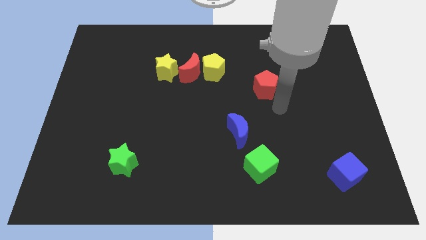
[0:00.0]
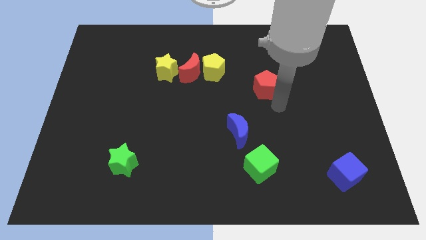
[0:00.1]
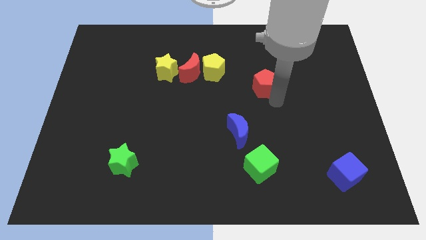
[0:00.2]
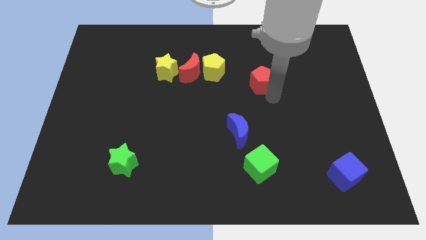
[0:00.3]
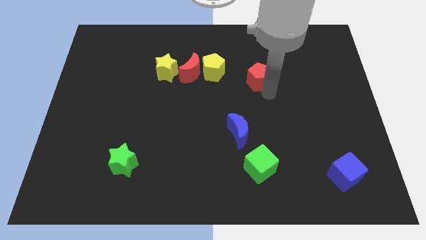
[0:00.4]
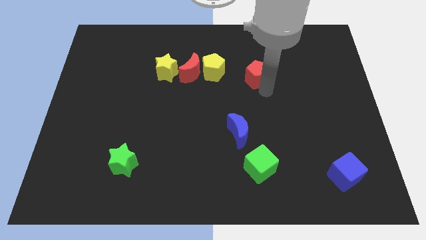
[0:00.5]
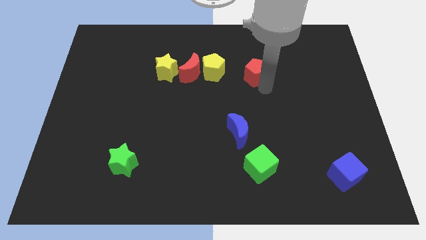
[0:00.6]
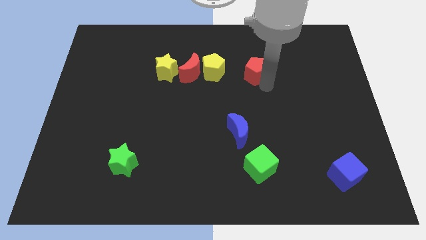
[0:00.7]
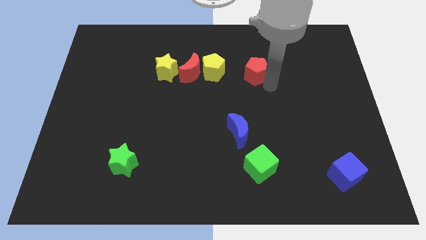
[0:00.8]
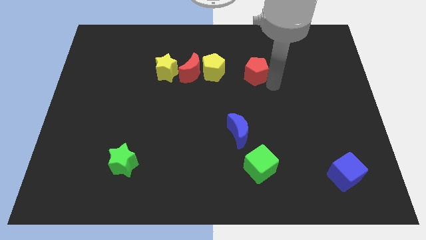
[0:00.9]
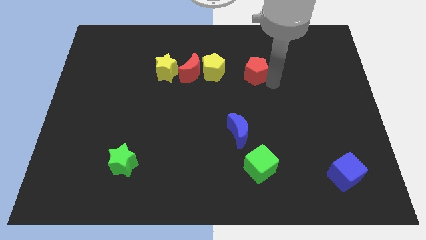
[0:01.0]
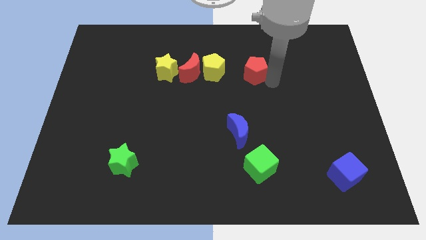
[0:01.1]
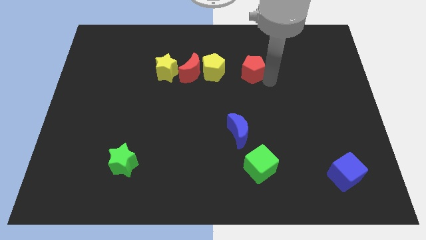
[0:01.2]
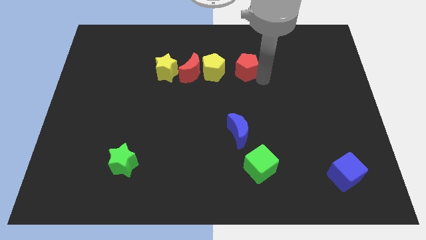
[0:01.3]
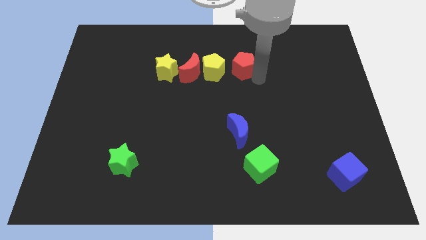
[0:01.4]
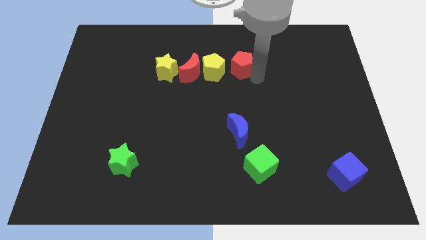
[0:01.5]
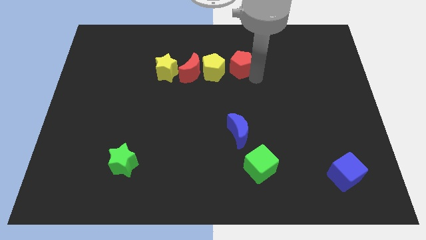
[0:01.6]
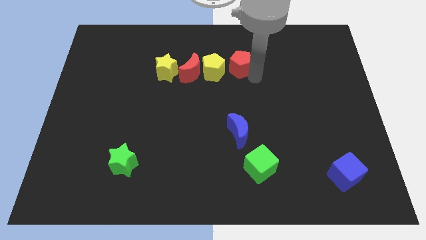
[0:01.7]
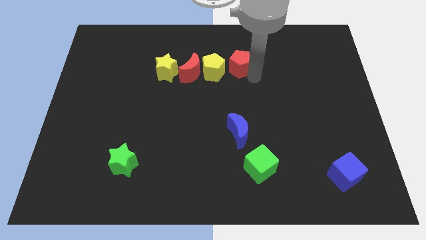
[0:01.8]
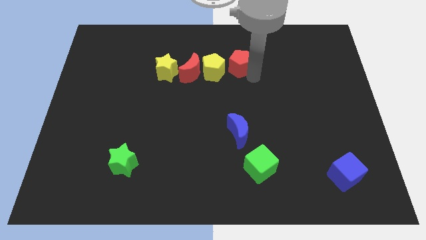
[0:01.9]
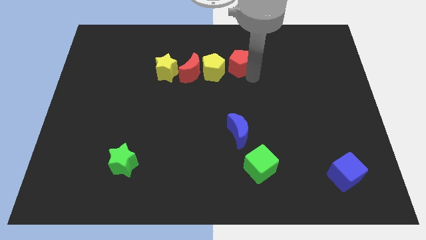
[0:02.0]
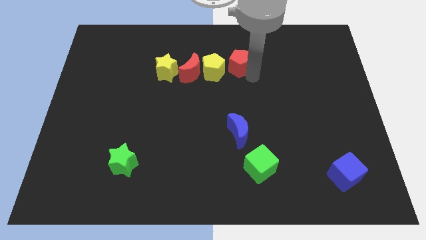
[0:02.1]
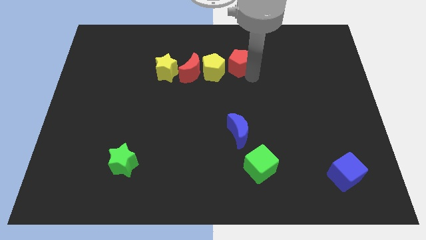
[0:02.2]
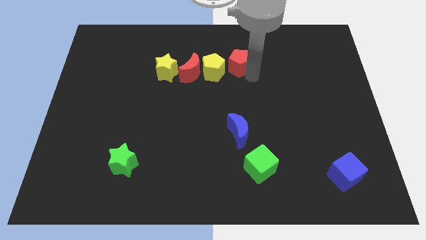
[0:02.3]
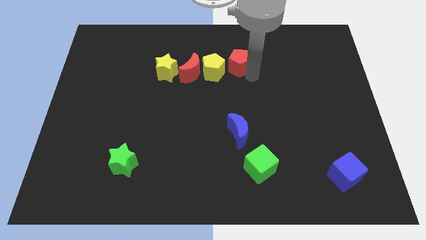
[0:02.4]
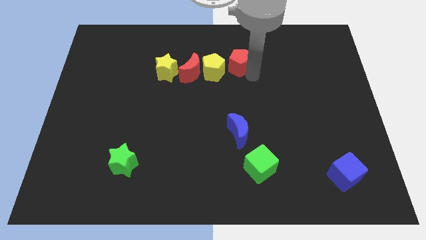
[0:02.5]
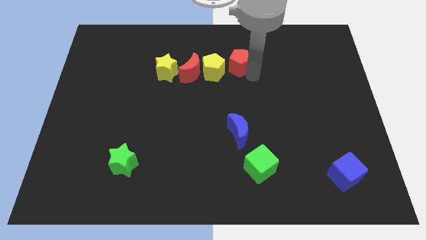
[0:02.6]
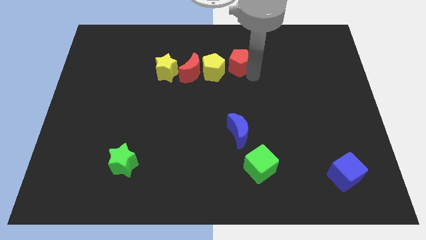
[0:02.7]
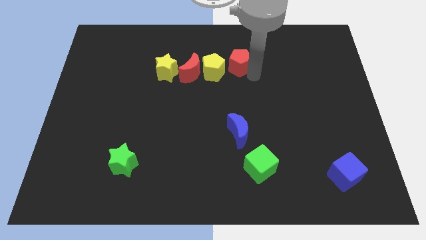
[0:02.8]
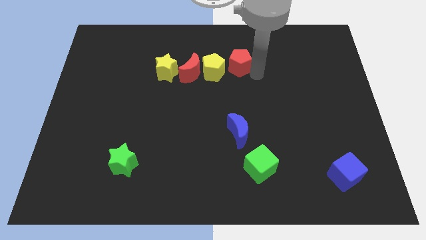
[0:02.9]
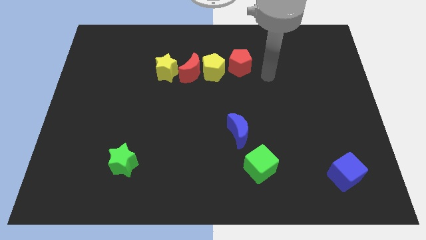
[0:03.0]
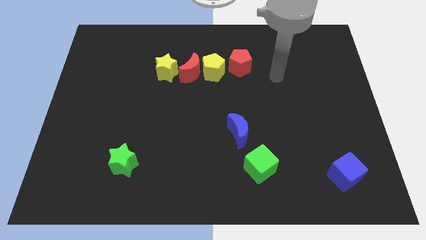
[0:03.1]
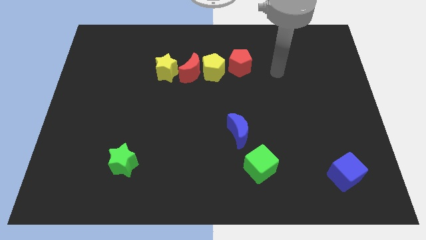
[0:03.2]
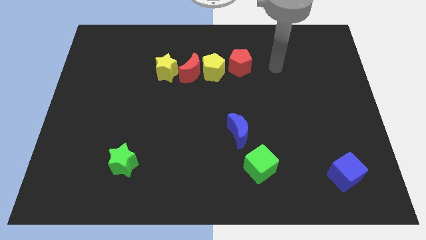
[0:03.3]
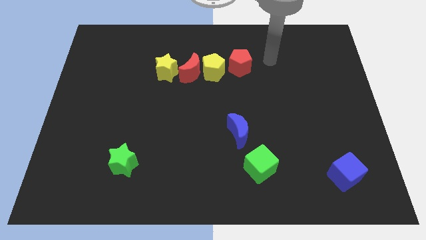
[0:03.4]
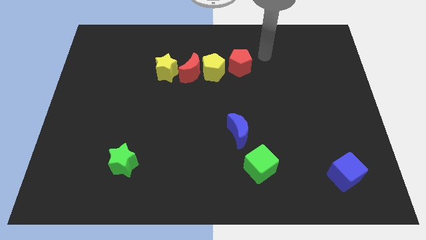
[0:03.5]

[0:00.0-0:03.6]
place the red pentagon to the right of the yellow pentagon

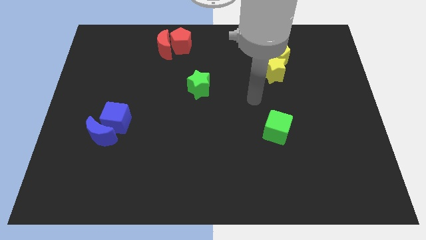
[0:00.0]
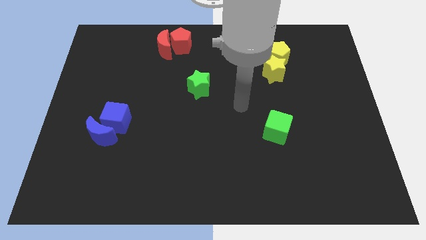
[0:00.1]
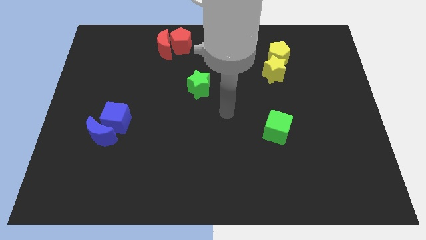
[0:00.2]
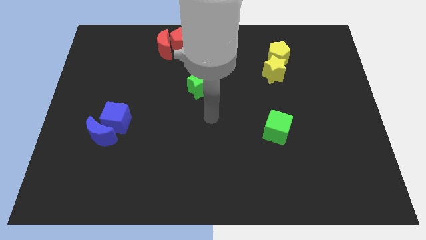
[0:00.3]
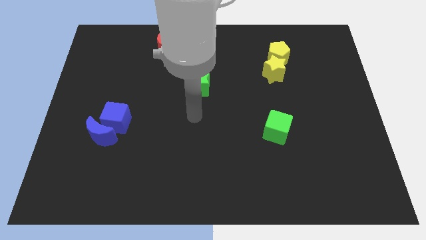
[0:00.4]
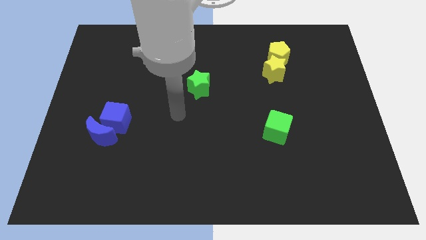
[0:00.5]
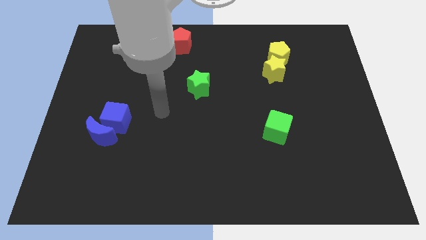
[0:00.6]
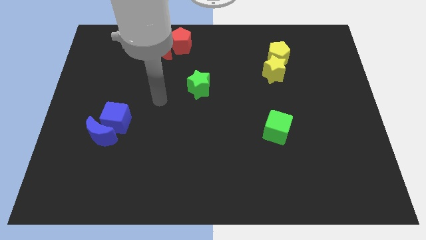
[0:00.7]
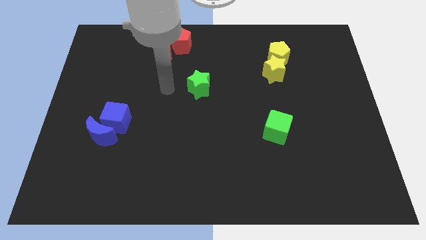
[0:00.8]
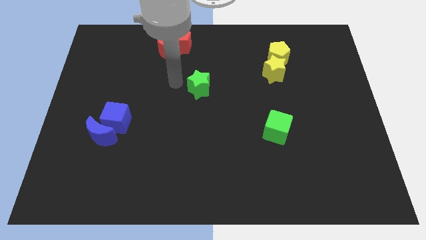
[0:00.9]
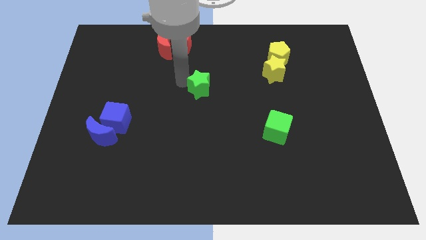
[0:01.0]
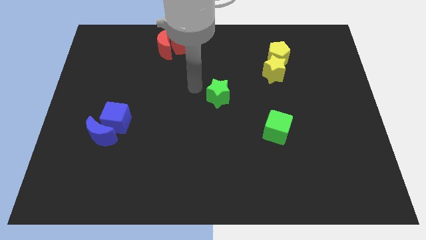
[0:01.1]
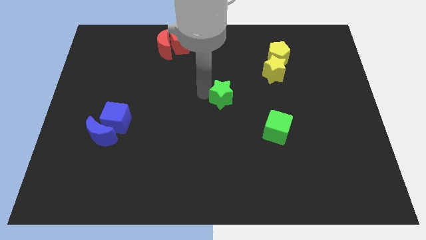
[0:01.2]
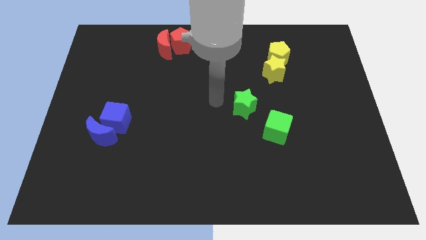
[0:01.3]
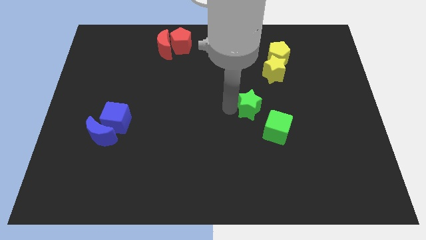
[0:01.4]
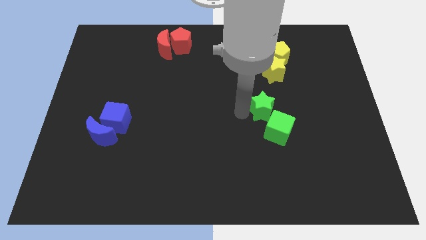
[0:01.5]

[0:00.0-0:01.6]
move the green star into green cube

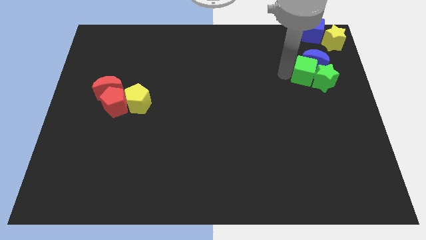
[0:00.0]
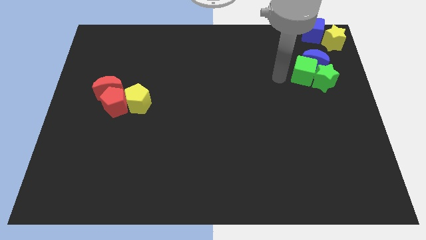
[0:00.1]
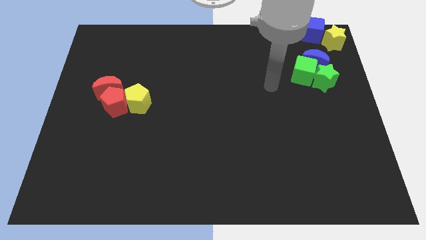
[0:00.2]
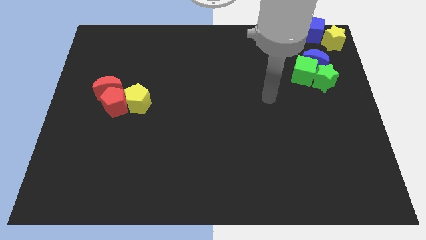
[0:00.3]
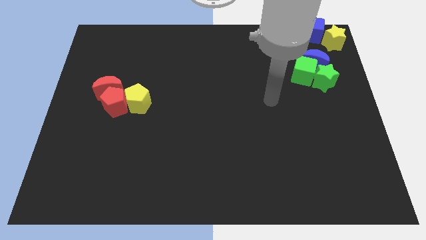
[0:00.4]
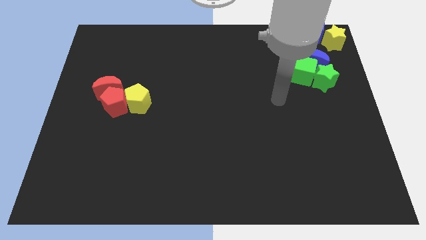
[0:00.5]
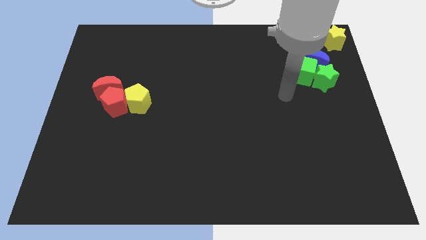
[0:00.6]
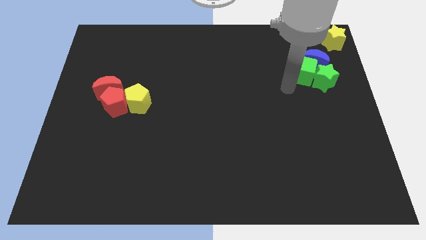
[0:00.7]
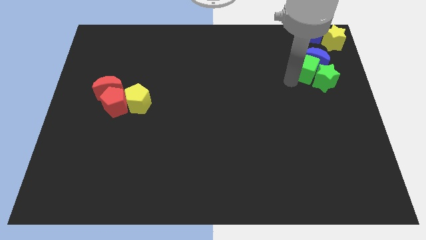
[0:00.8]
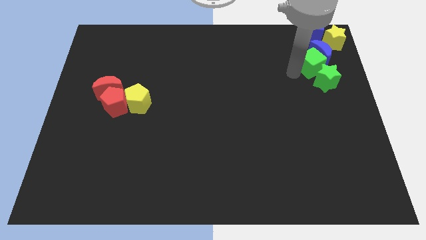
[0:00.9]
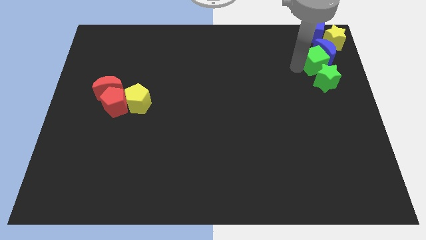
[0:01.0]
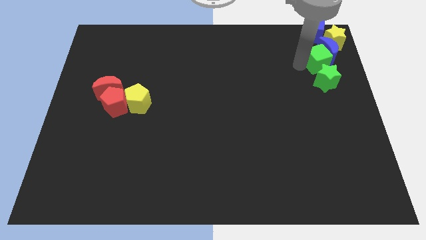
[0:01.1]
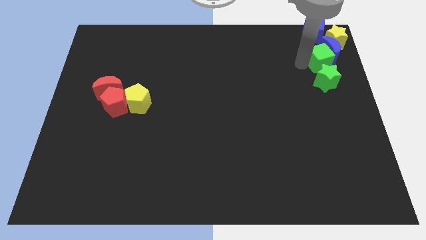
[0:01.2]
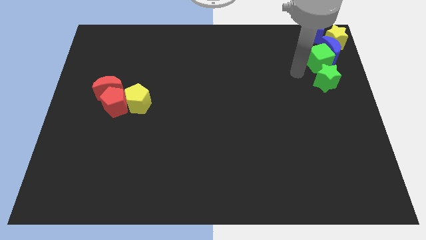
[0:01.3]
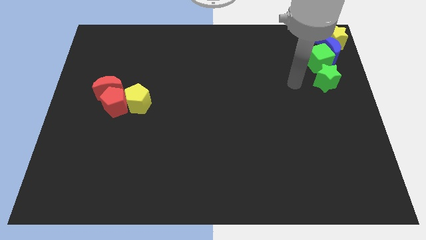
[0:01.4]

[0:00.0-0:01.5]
push the green cube and blue moon into the yellow star

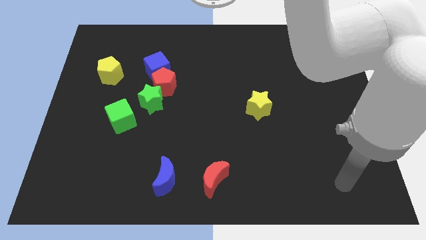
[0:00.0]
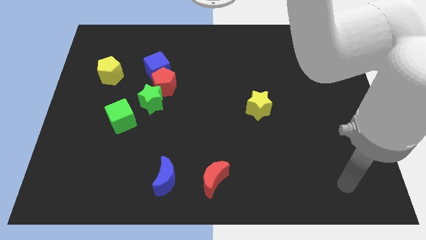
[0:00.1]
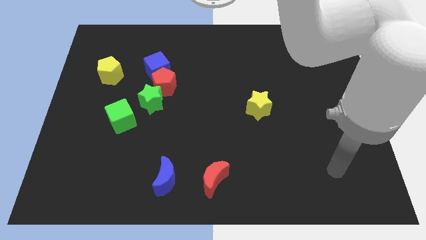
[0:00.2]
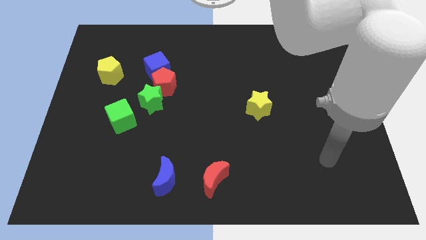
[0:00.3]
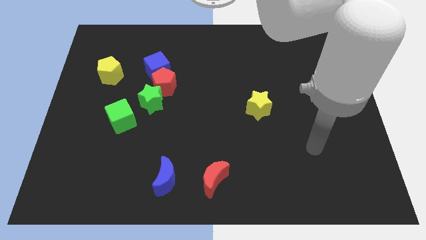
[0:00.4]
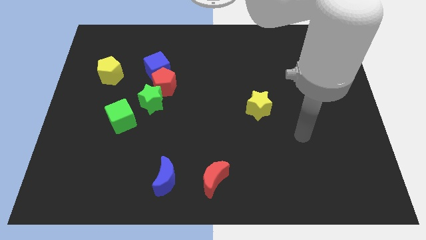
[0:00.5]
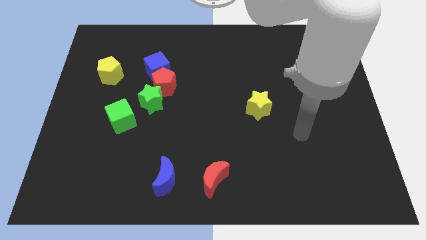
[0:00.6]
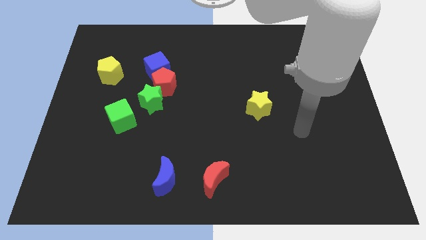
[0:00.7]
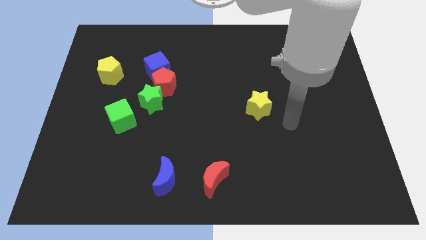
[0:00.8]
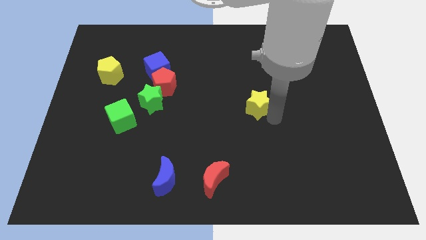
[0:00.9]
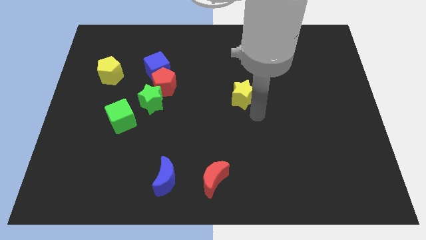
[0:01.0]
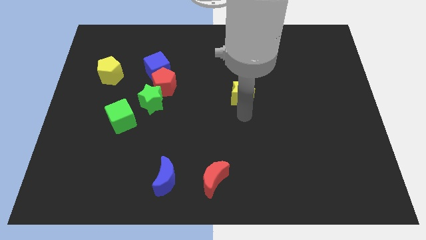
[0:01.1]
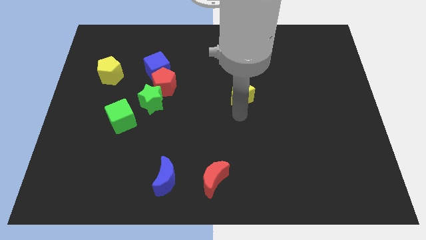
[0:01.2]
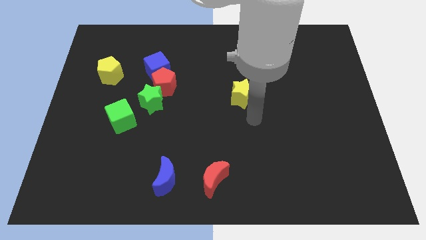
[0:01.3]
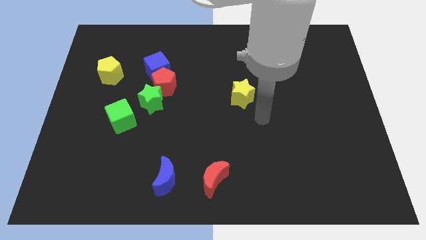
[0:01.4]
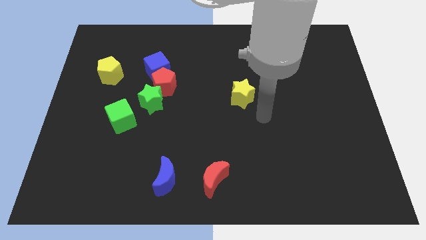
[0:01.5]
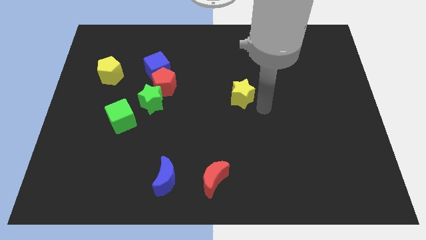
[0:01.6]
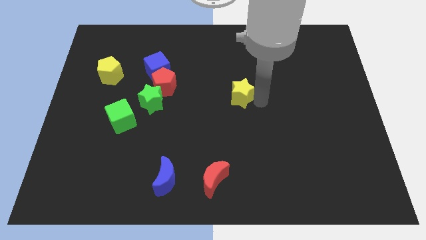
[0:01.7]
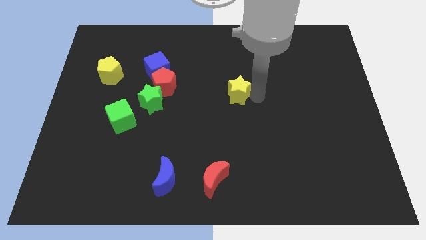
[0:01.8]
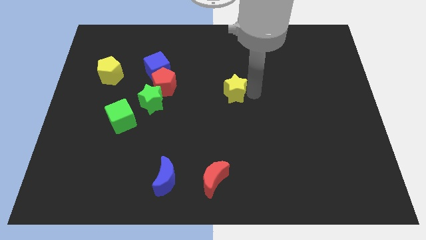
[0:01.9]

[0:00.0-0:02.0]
move the arm the right side of the yellow star

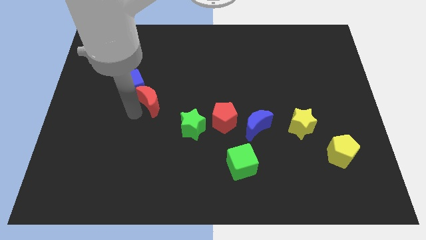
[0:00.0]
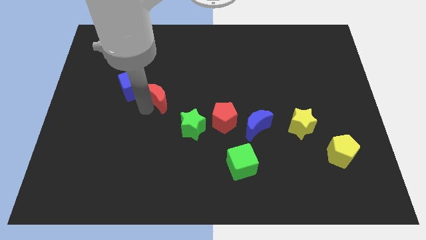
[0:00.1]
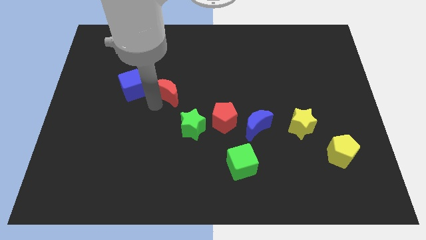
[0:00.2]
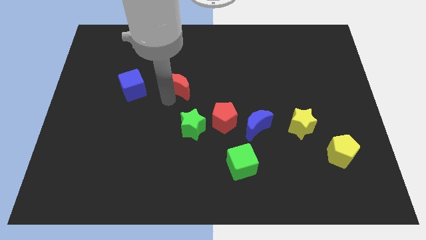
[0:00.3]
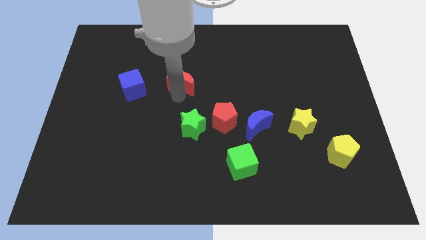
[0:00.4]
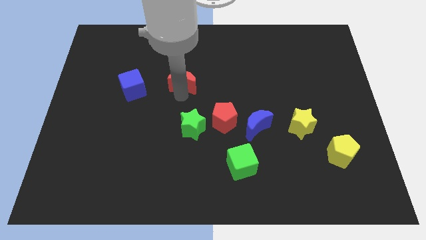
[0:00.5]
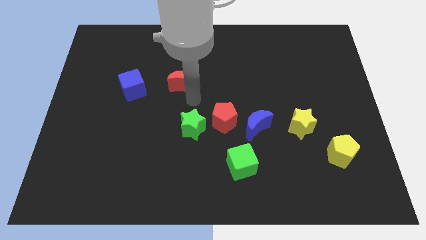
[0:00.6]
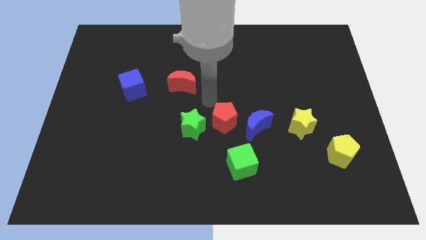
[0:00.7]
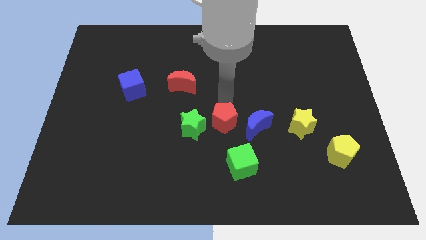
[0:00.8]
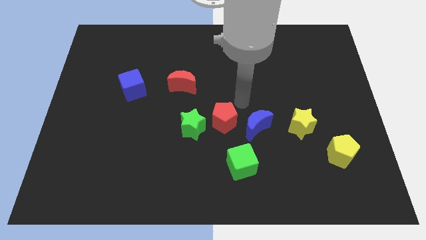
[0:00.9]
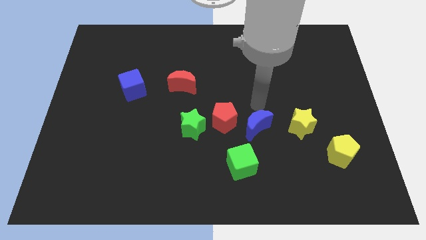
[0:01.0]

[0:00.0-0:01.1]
separate red moon from blue cube
